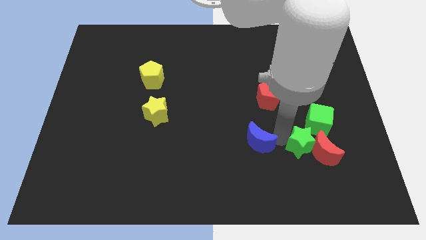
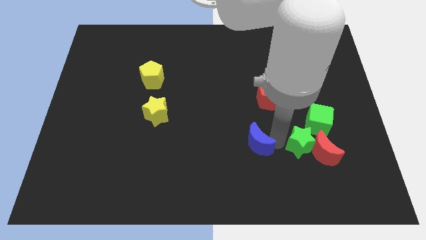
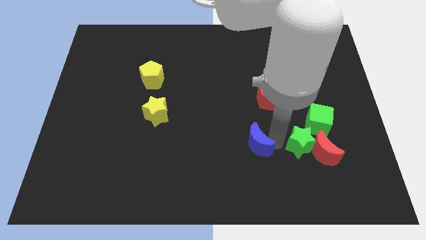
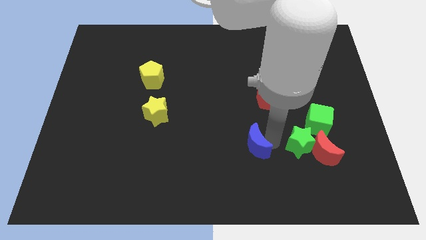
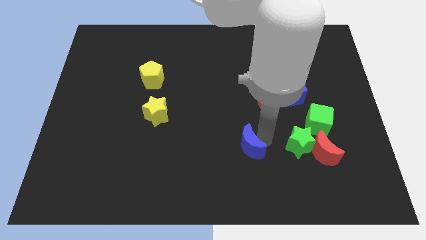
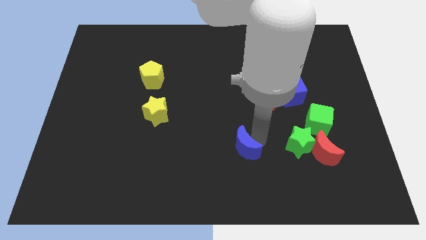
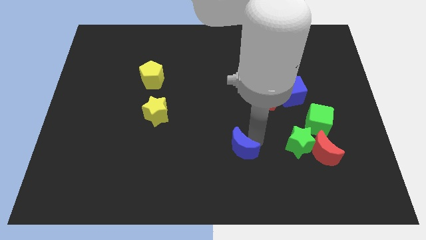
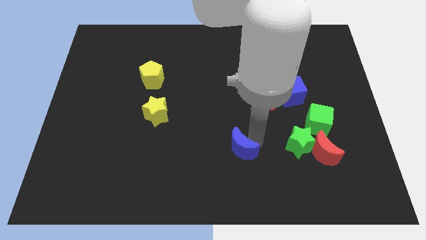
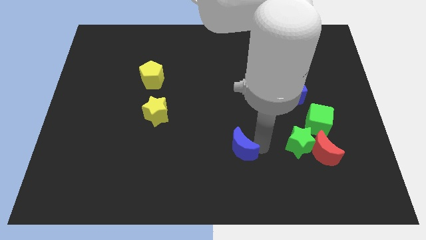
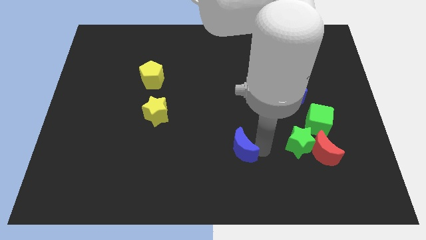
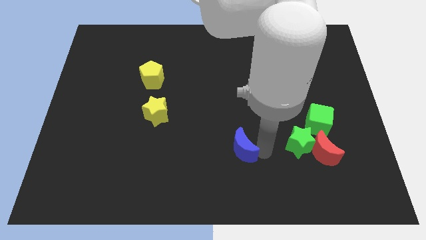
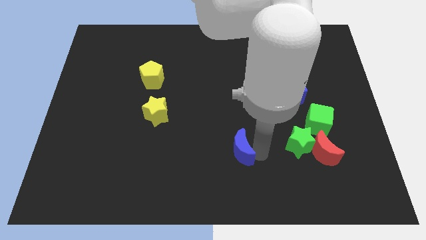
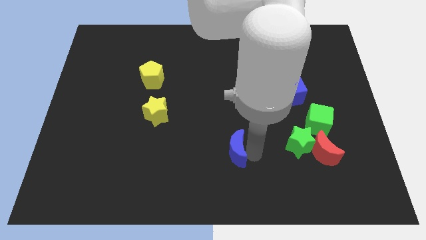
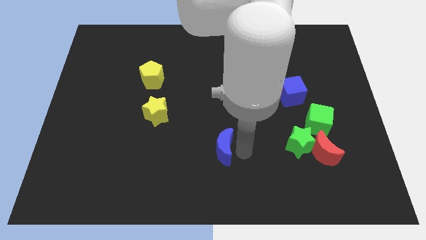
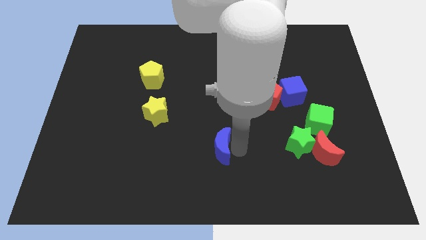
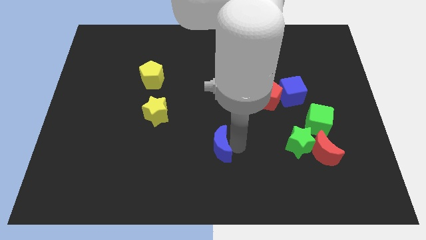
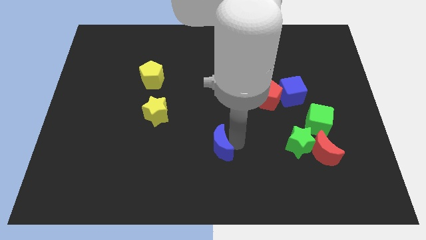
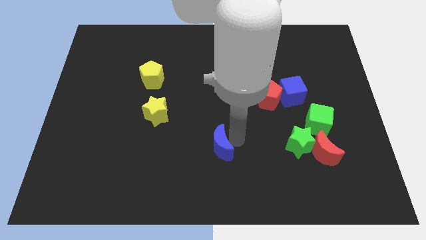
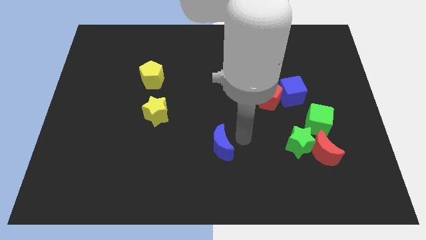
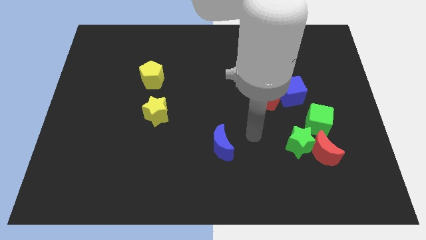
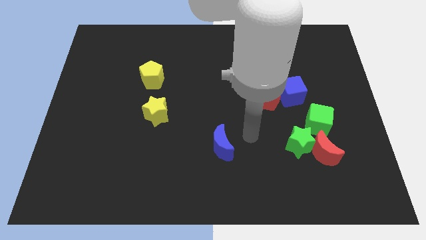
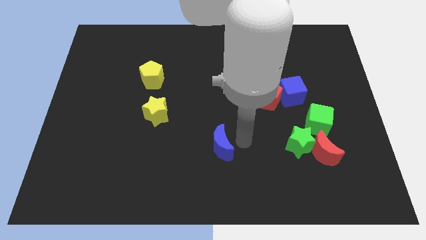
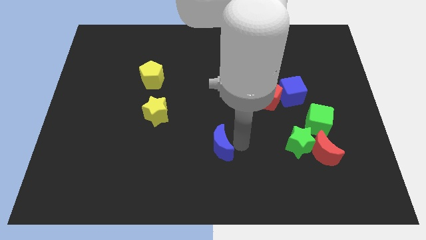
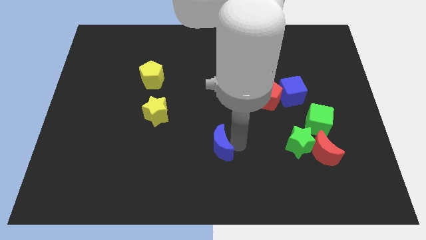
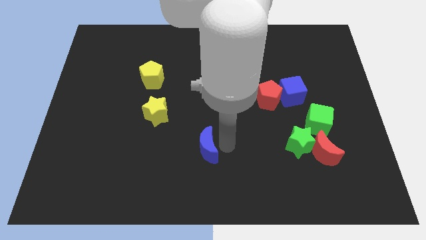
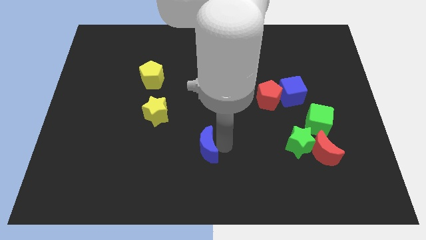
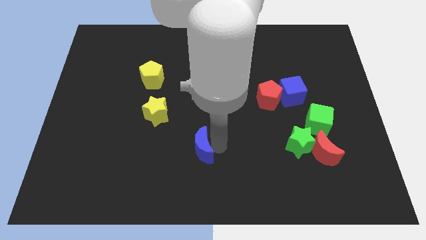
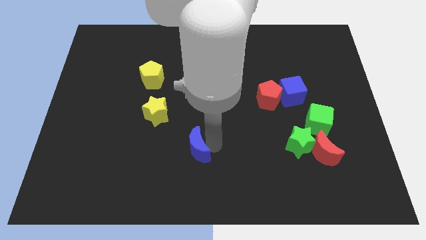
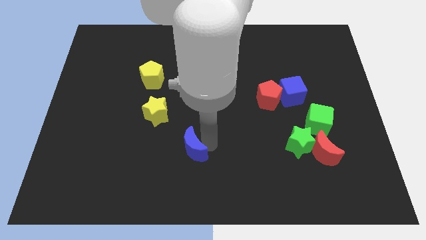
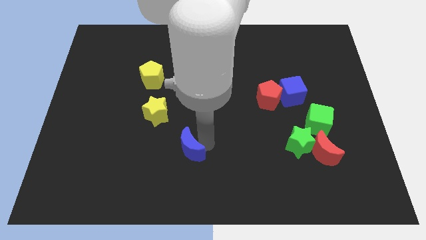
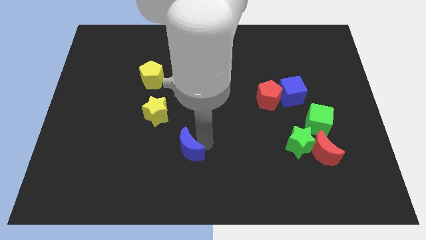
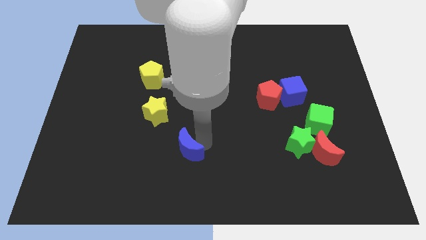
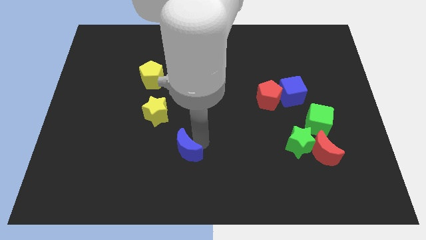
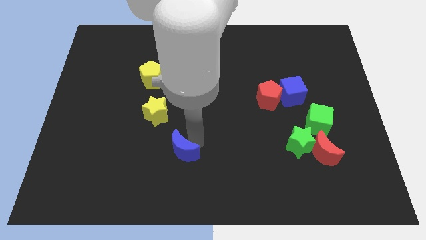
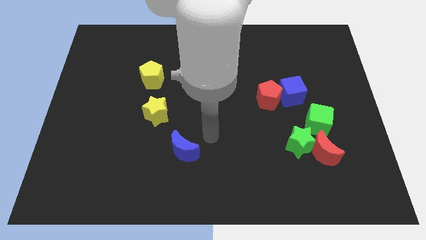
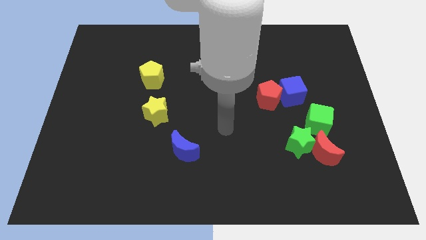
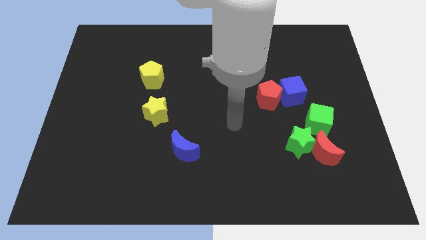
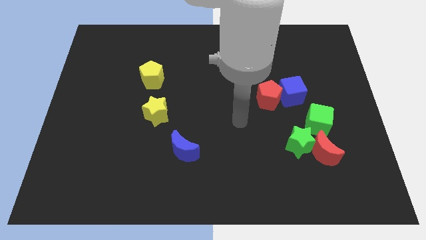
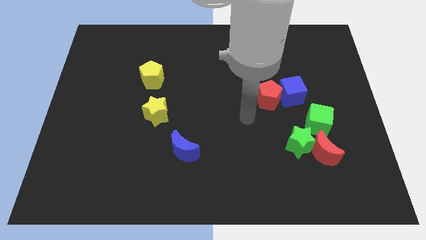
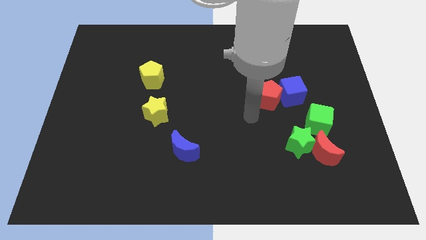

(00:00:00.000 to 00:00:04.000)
push the blue moon to the bottom right of the yellow star

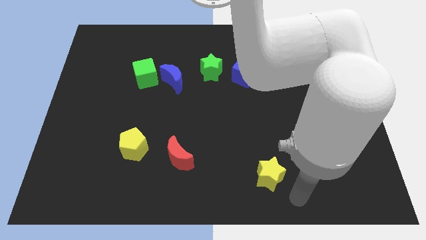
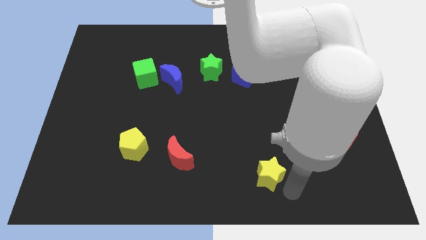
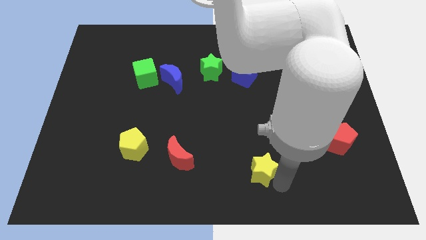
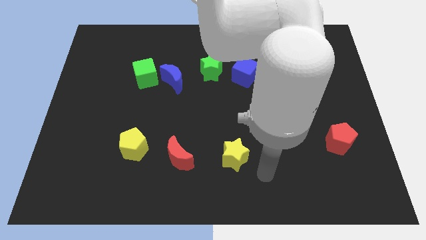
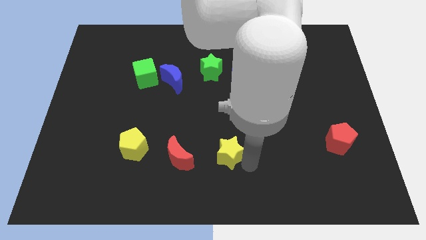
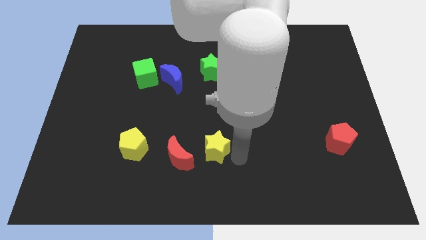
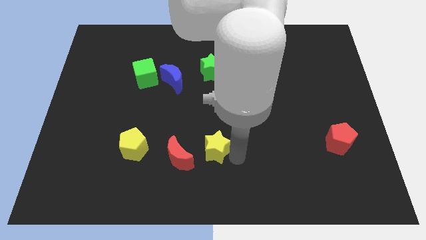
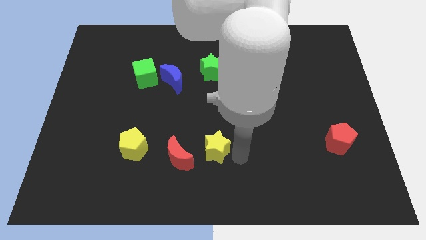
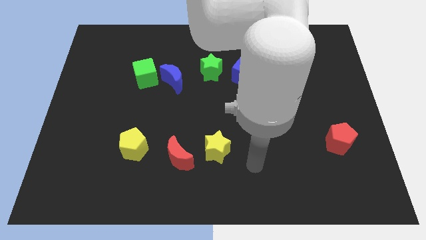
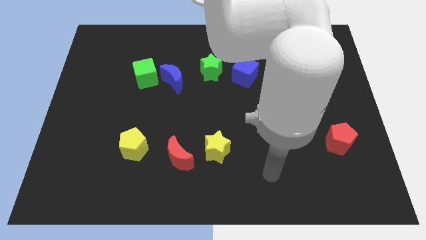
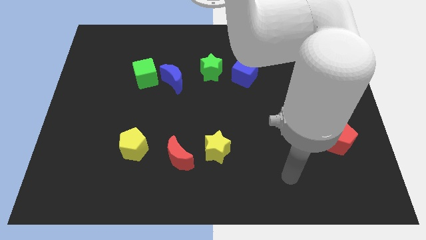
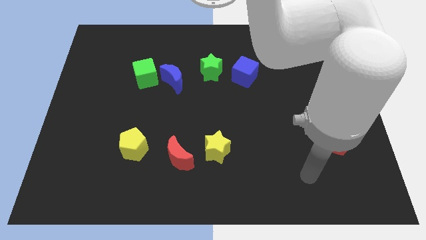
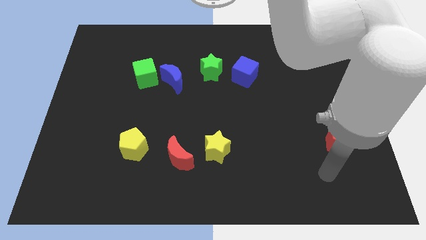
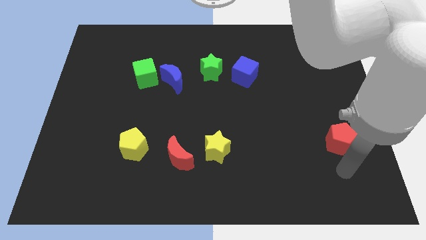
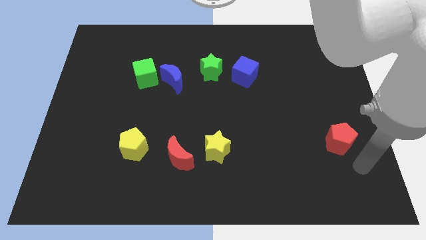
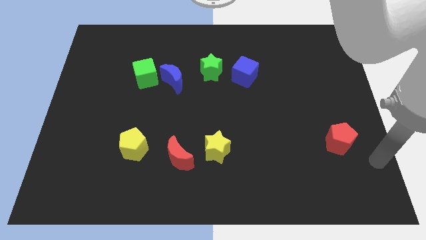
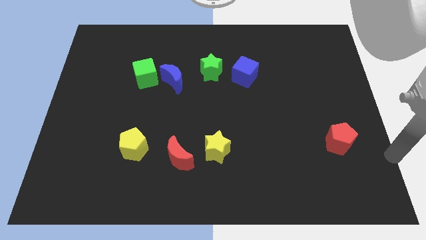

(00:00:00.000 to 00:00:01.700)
move the red pentagon towards the center of the board

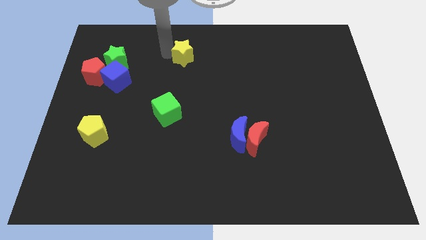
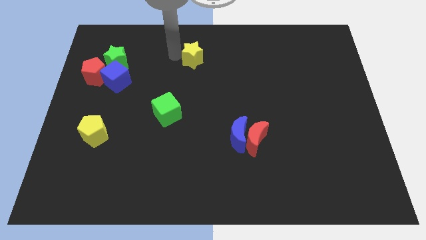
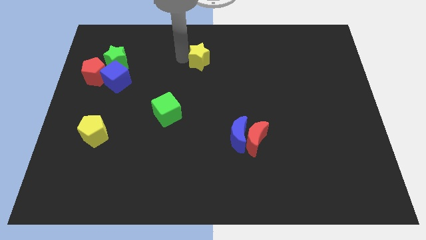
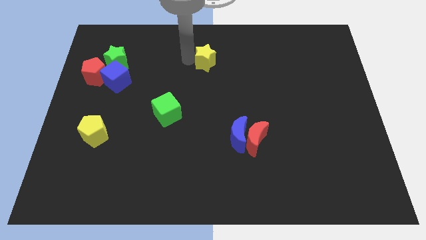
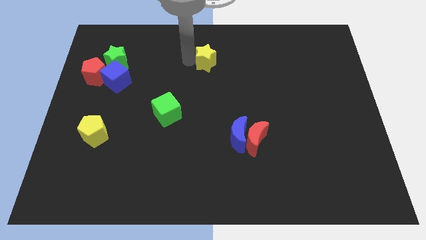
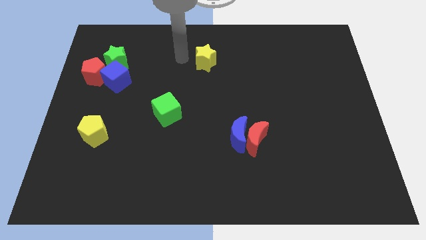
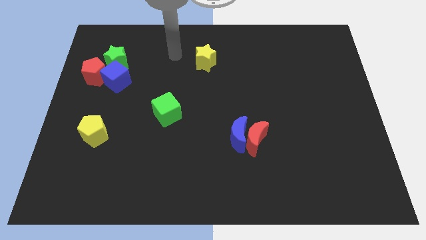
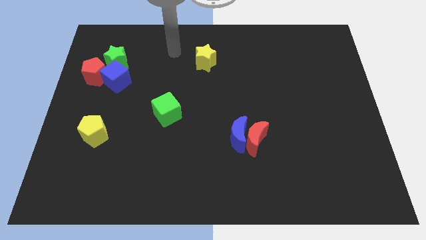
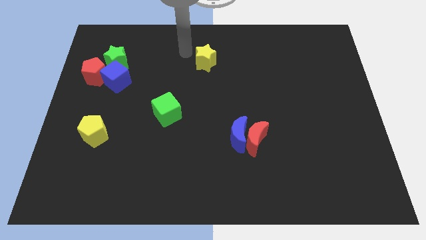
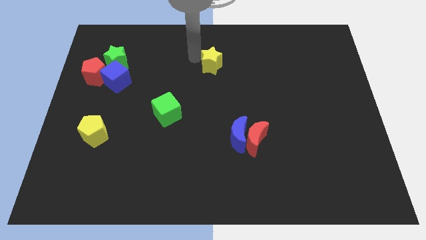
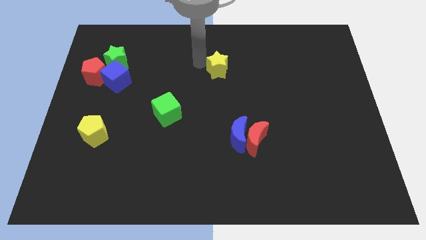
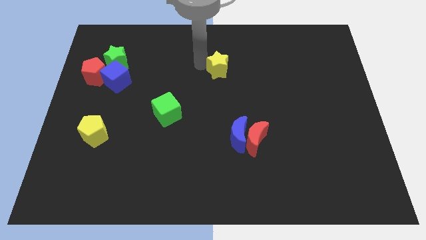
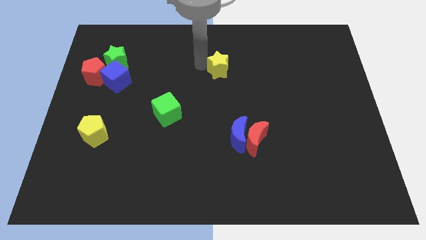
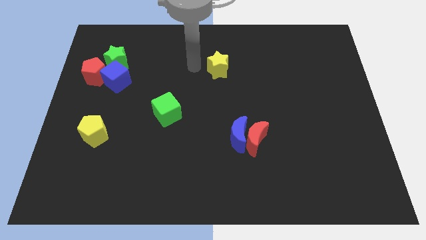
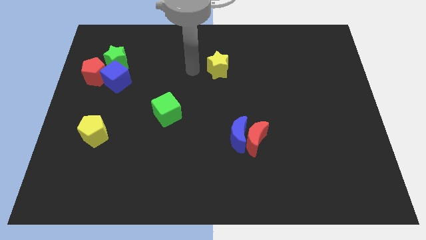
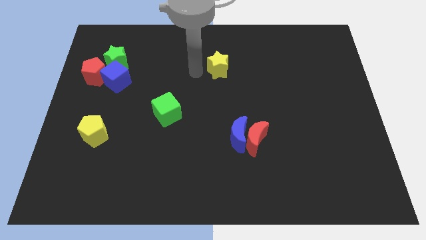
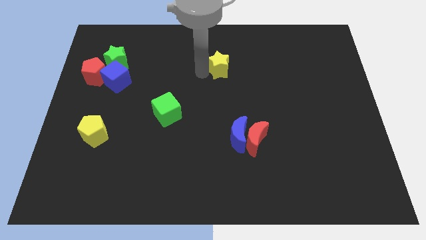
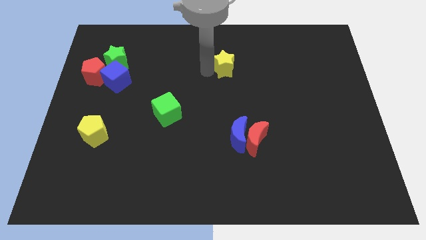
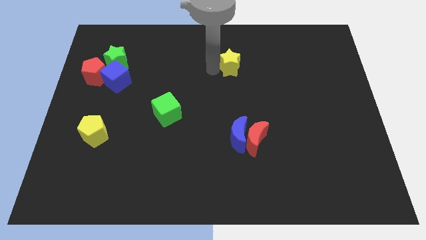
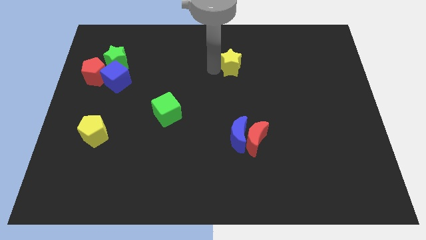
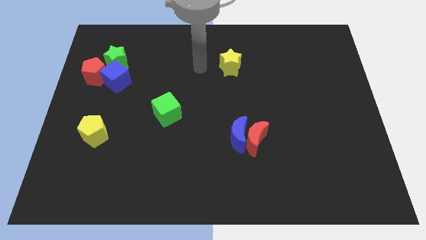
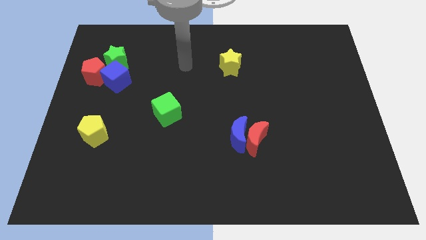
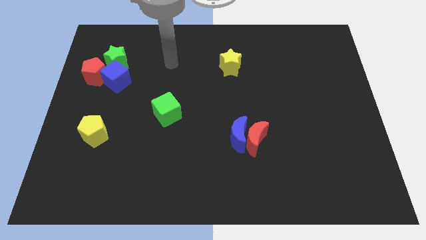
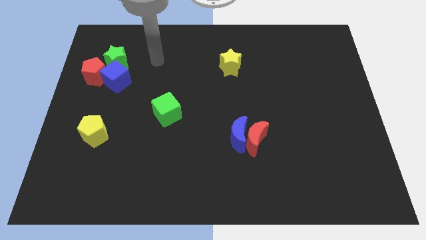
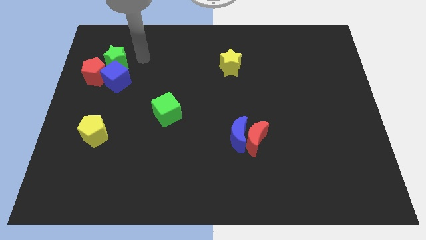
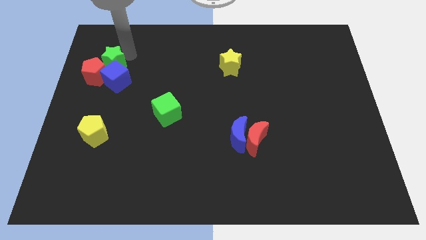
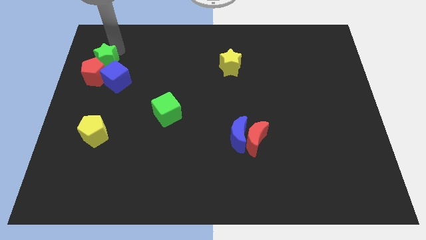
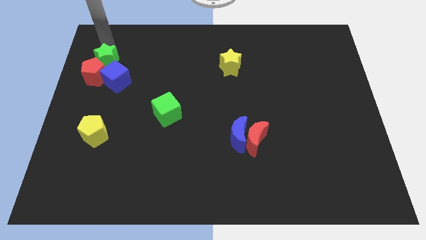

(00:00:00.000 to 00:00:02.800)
push yellow star to its right

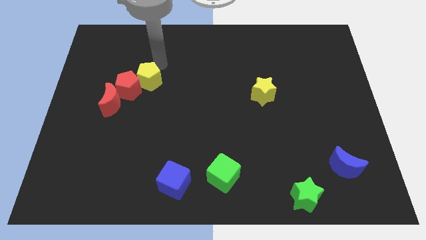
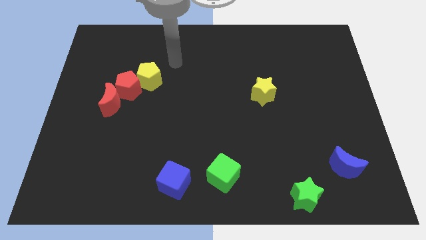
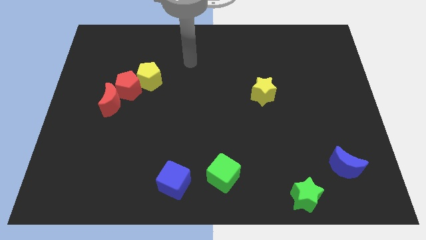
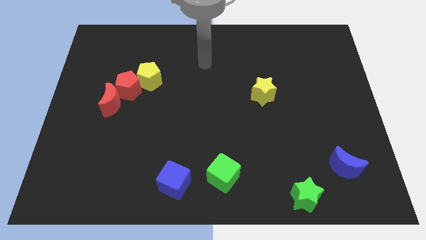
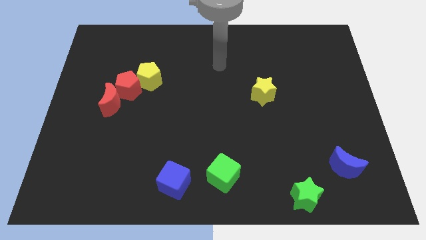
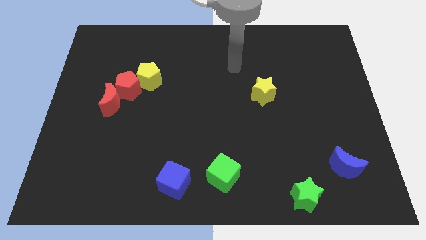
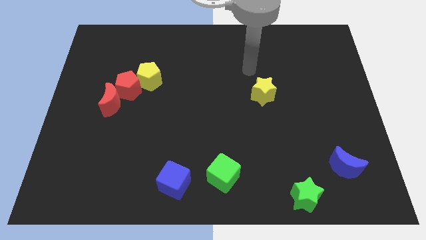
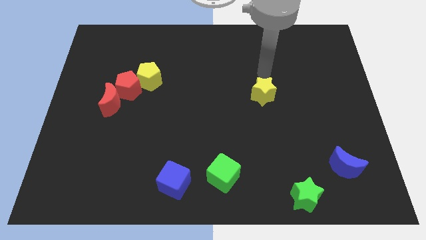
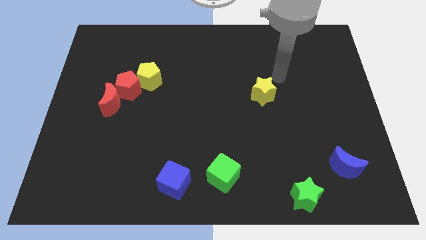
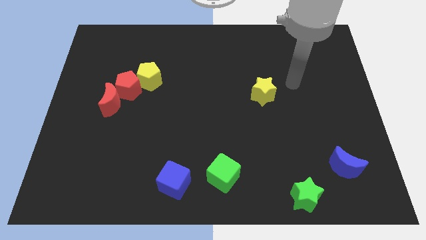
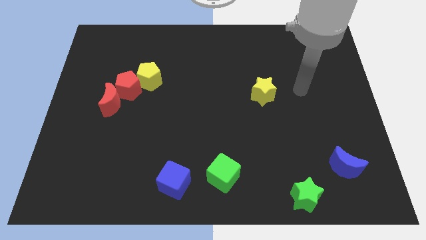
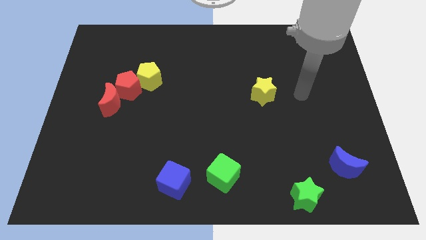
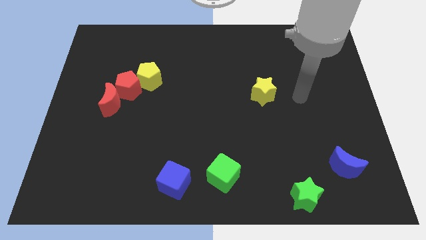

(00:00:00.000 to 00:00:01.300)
move the arm away from the yellow pentagon
